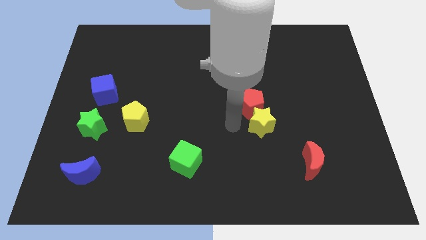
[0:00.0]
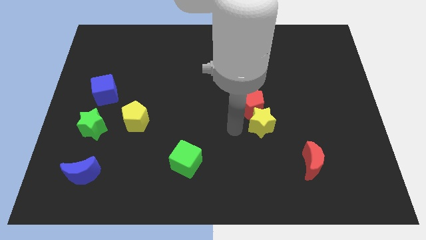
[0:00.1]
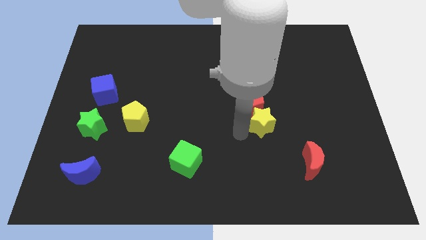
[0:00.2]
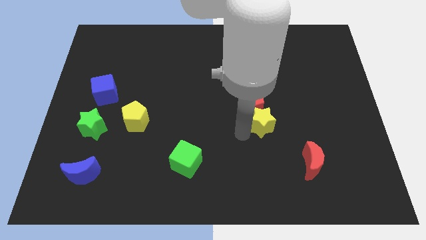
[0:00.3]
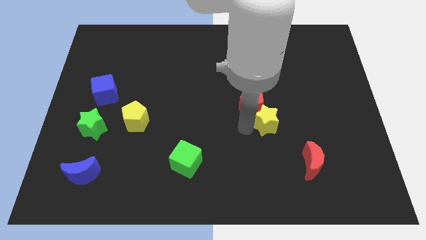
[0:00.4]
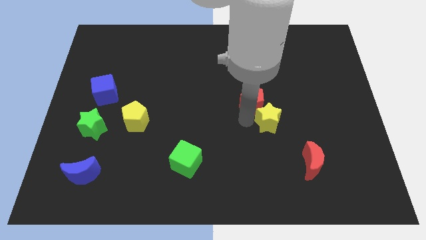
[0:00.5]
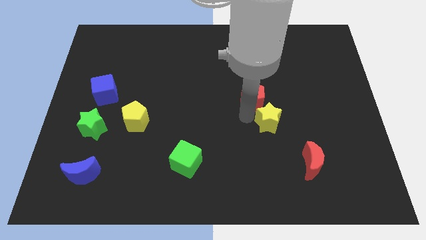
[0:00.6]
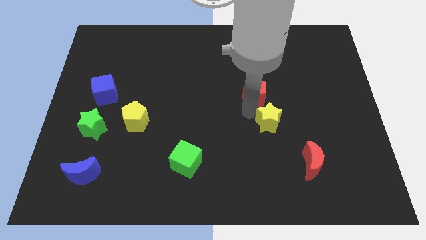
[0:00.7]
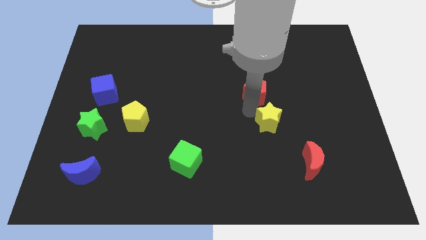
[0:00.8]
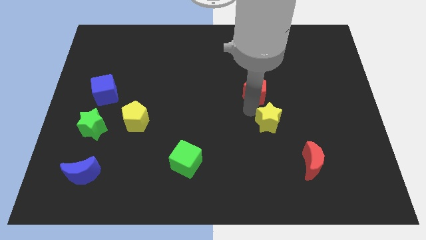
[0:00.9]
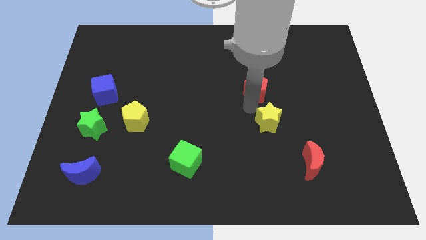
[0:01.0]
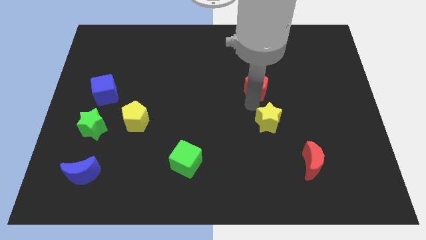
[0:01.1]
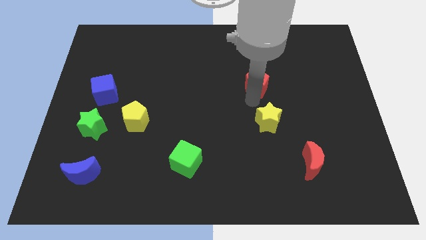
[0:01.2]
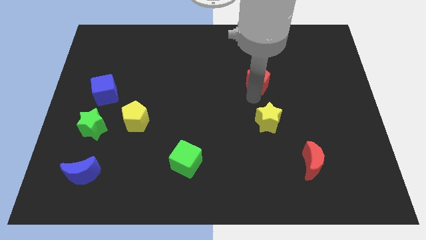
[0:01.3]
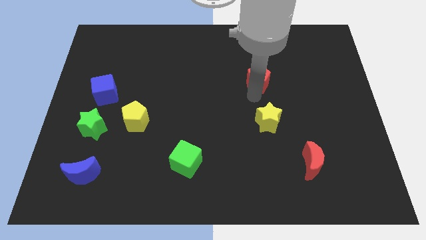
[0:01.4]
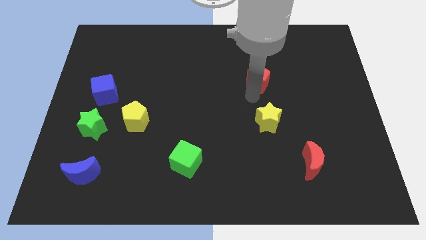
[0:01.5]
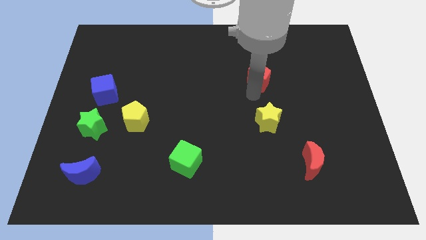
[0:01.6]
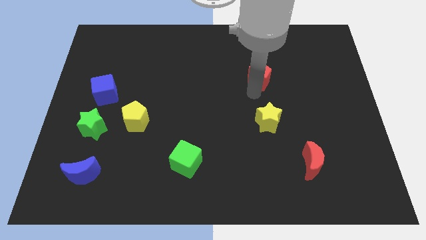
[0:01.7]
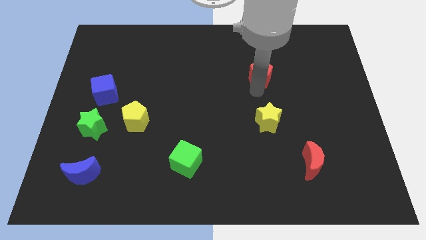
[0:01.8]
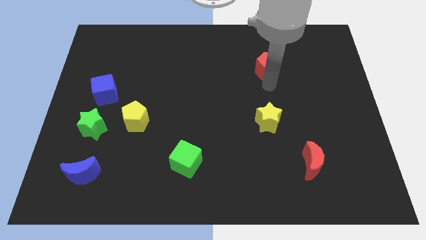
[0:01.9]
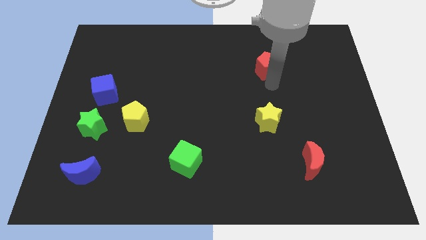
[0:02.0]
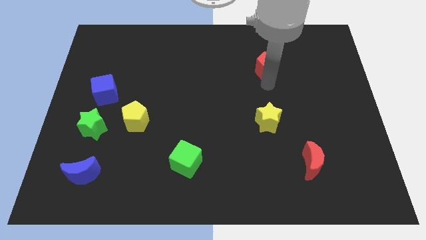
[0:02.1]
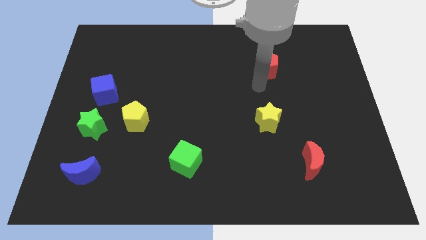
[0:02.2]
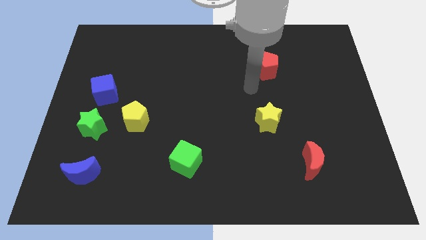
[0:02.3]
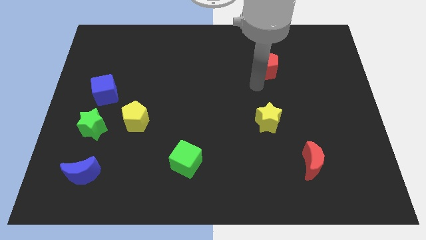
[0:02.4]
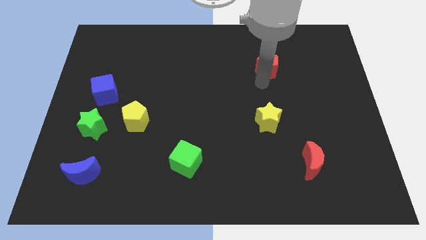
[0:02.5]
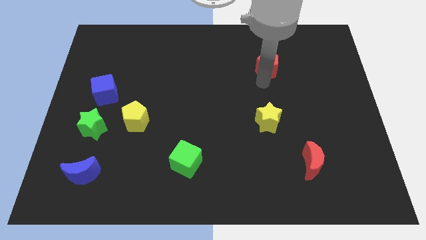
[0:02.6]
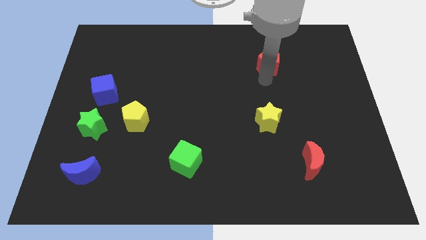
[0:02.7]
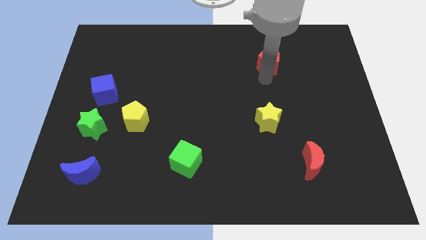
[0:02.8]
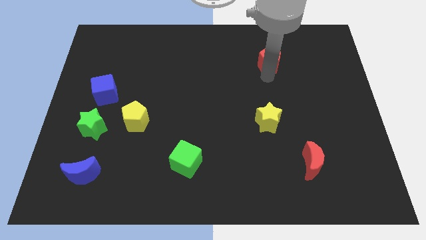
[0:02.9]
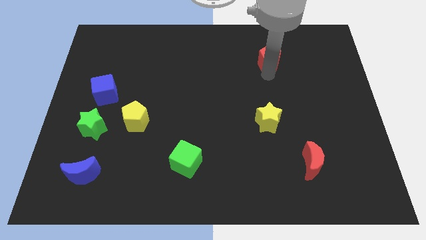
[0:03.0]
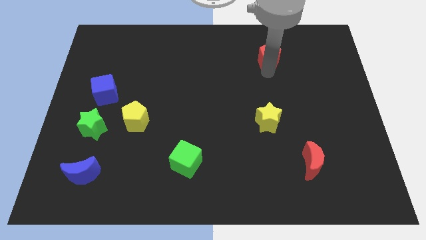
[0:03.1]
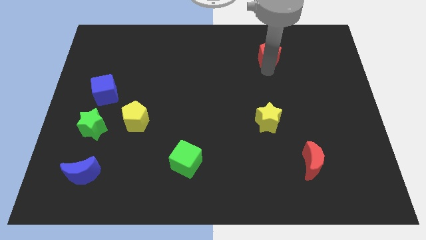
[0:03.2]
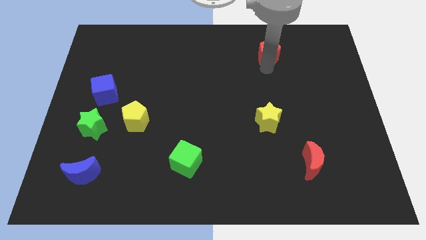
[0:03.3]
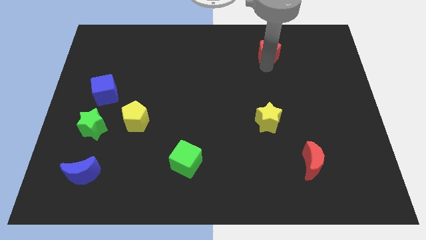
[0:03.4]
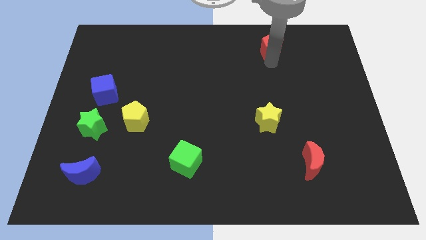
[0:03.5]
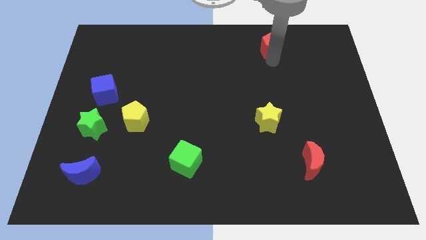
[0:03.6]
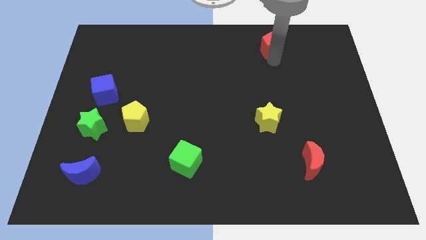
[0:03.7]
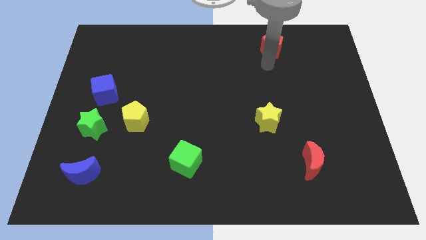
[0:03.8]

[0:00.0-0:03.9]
slightly move the red pentagon up

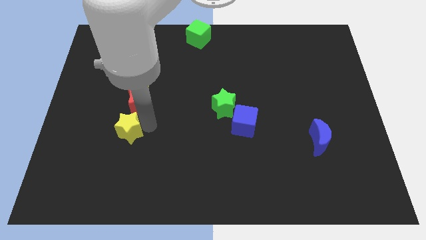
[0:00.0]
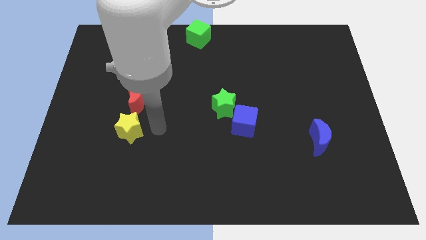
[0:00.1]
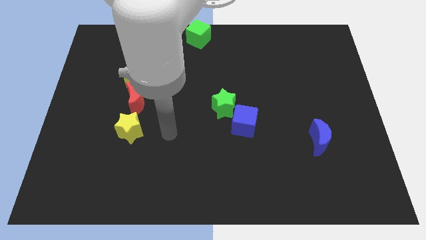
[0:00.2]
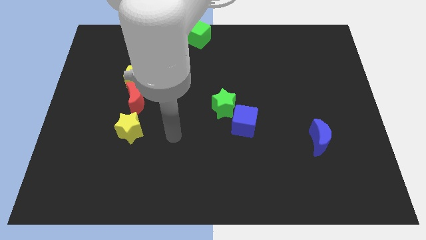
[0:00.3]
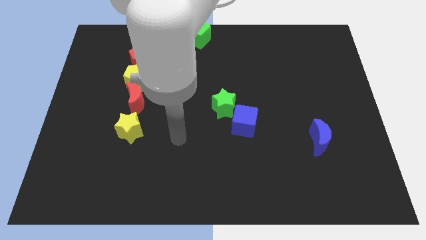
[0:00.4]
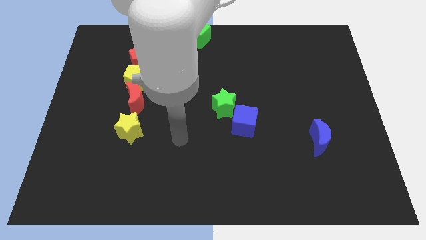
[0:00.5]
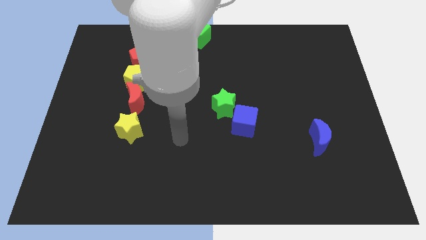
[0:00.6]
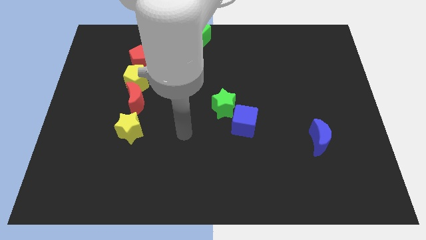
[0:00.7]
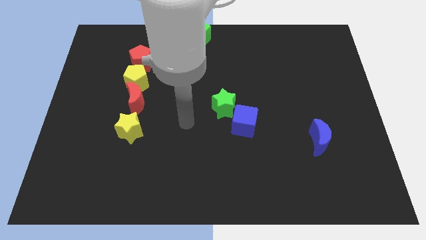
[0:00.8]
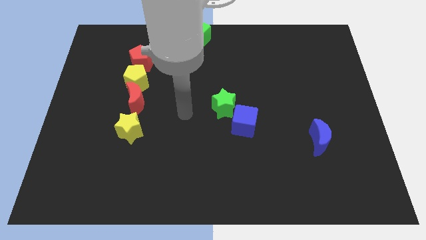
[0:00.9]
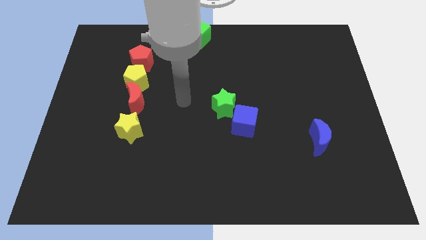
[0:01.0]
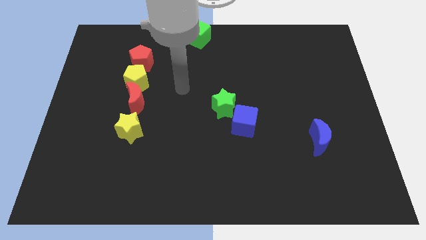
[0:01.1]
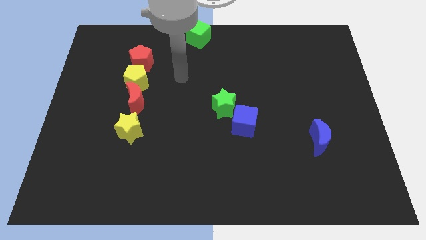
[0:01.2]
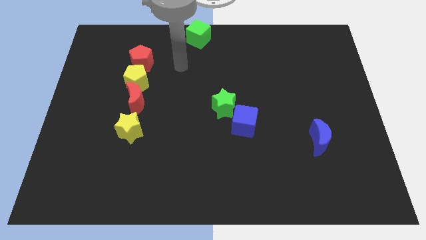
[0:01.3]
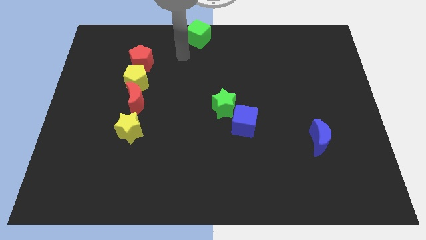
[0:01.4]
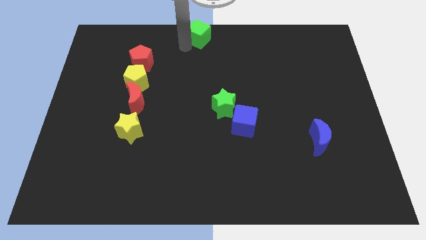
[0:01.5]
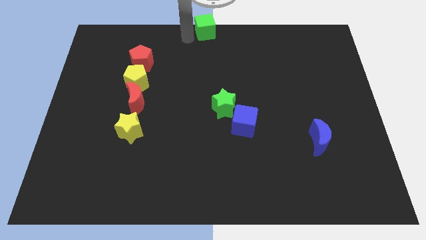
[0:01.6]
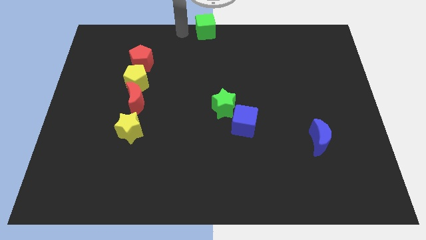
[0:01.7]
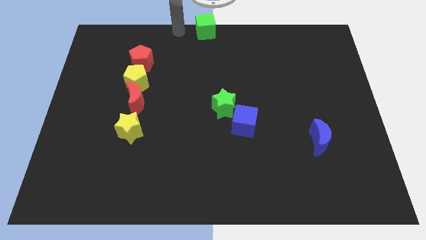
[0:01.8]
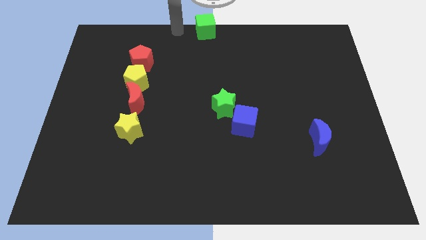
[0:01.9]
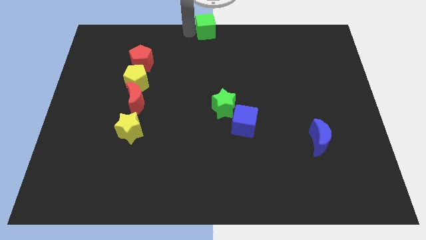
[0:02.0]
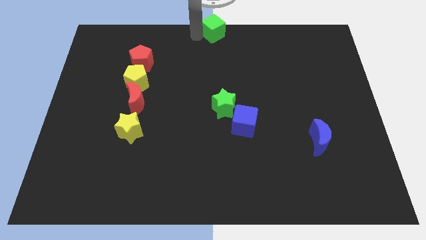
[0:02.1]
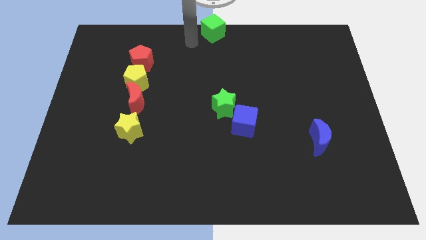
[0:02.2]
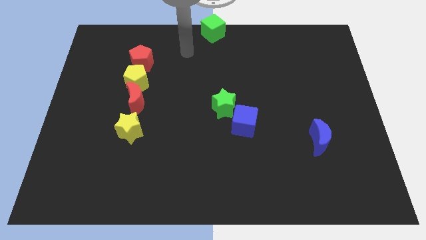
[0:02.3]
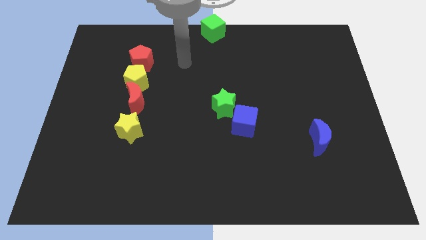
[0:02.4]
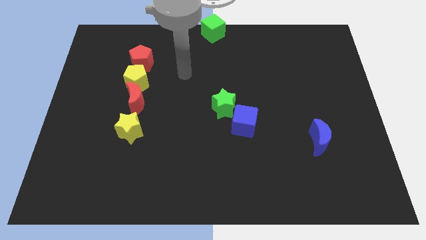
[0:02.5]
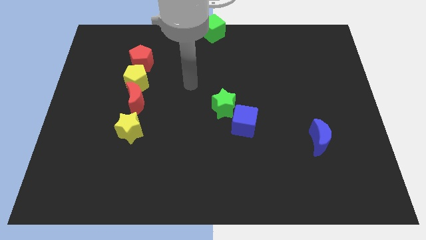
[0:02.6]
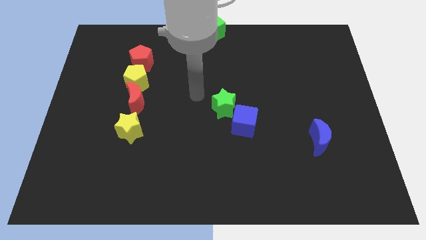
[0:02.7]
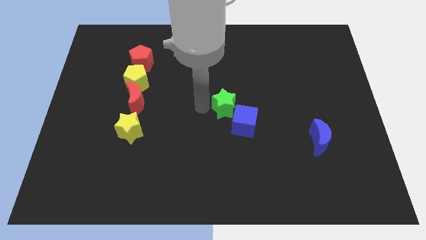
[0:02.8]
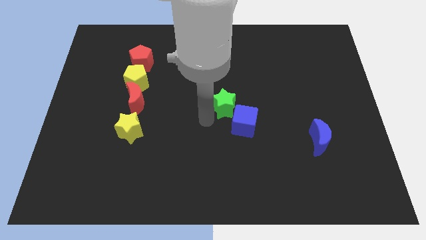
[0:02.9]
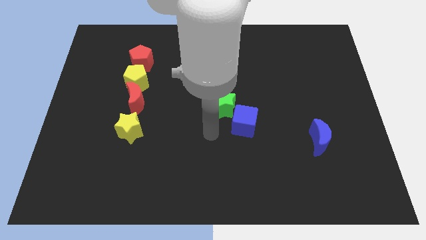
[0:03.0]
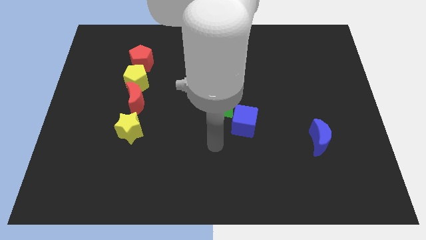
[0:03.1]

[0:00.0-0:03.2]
slide the green cube slightly to the right

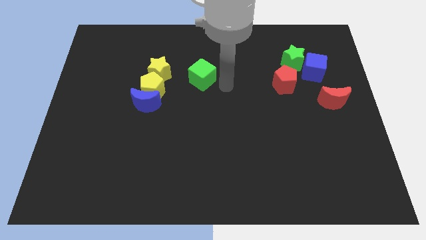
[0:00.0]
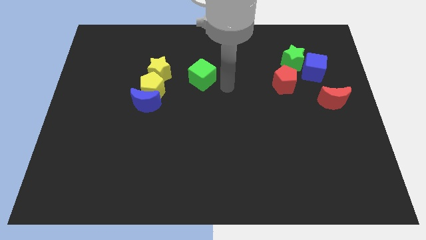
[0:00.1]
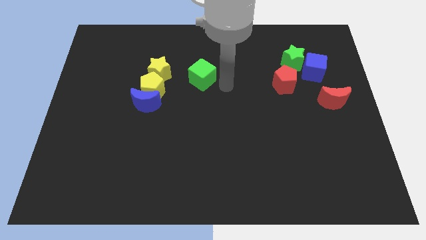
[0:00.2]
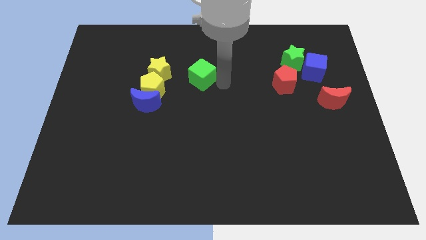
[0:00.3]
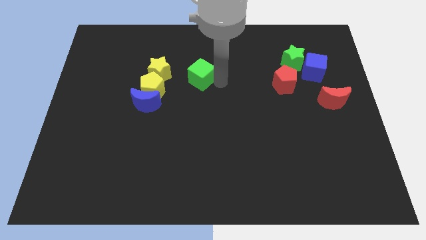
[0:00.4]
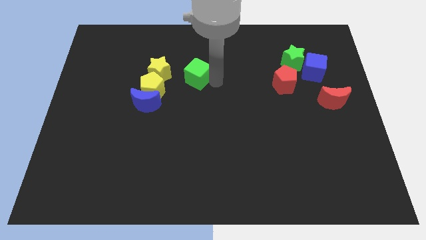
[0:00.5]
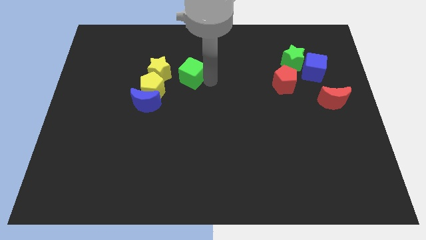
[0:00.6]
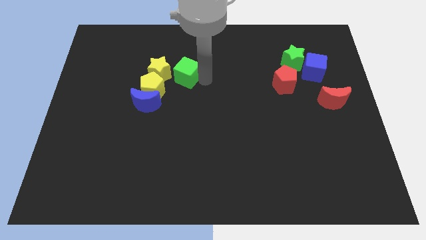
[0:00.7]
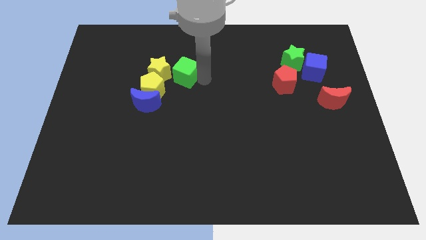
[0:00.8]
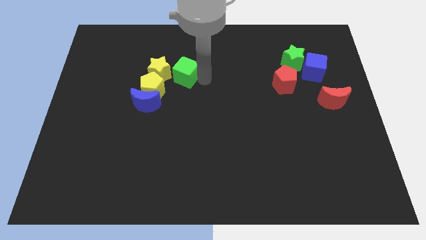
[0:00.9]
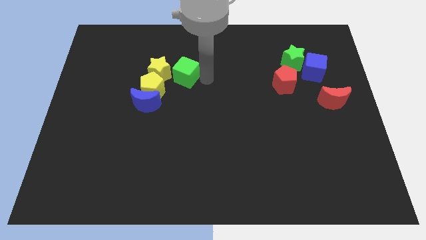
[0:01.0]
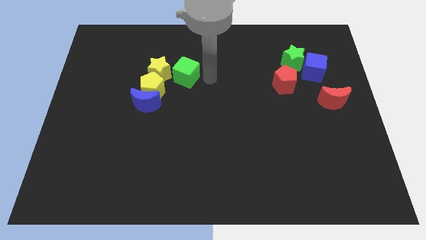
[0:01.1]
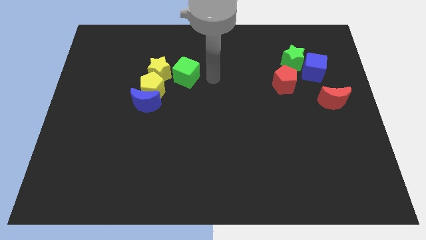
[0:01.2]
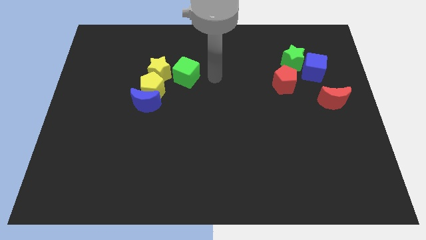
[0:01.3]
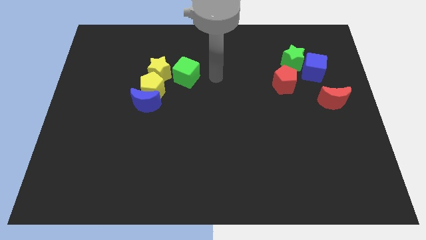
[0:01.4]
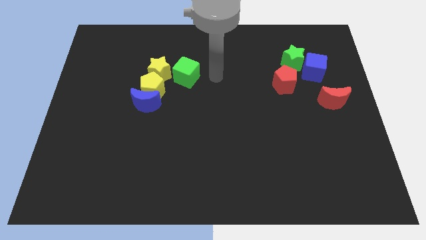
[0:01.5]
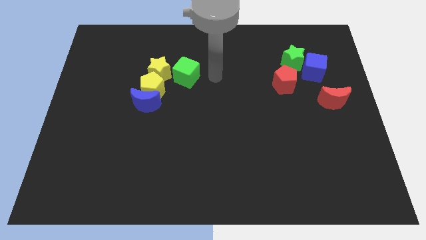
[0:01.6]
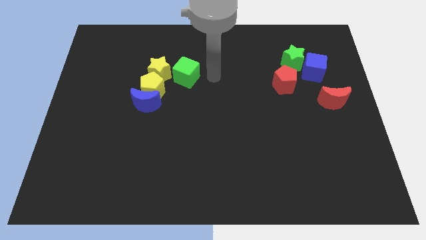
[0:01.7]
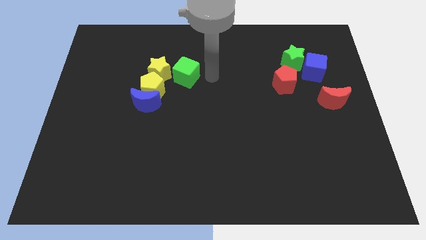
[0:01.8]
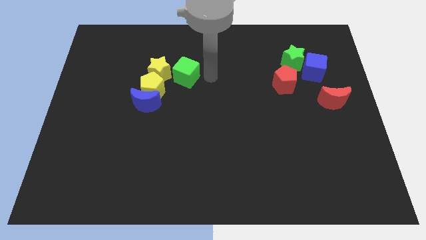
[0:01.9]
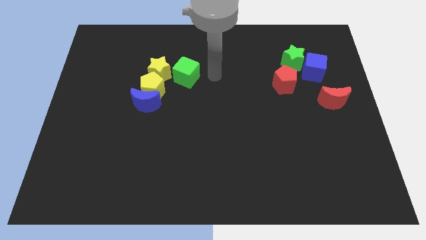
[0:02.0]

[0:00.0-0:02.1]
place the green cube to the right side of the yellow star
